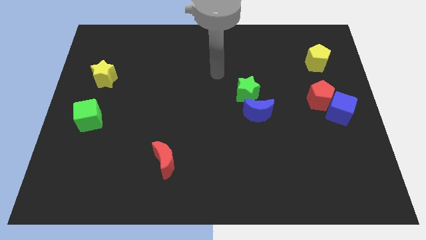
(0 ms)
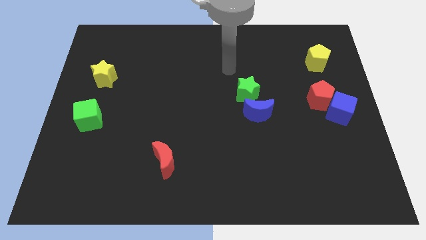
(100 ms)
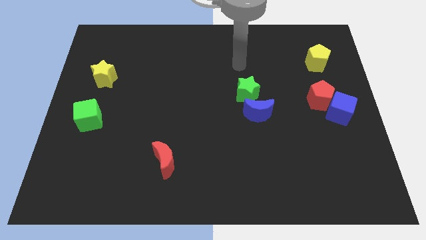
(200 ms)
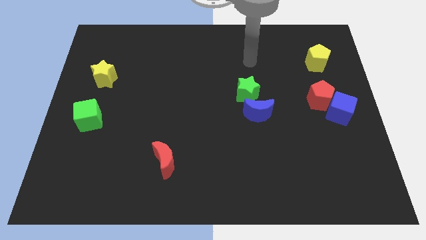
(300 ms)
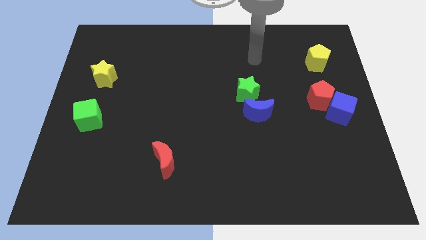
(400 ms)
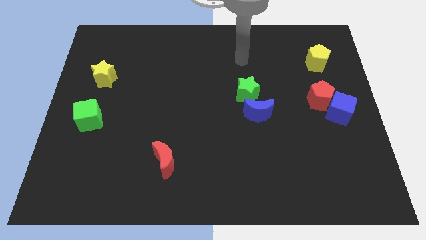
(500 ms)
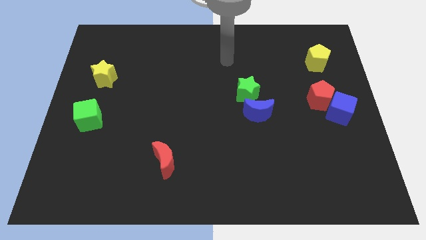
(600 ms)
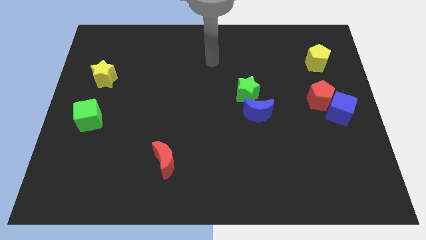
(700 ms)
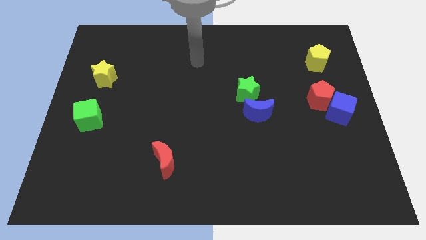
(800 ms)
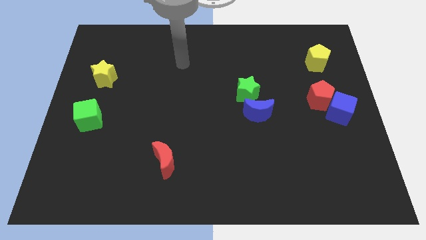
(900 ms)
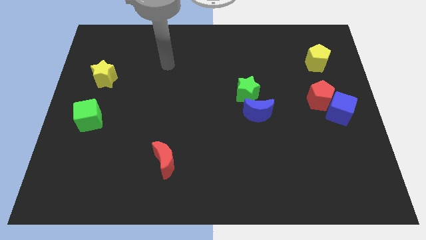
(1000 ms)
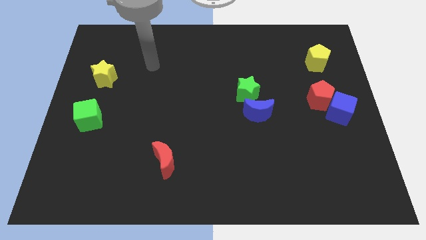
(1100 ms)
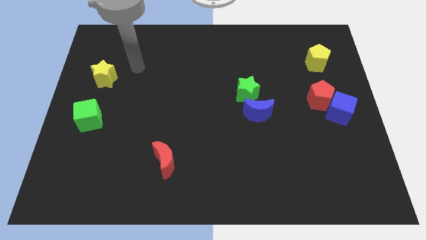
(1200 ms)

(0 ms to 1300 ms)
move the arm towards the yellow star

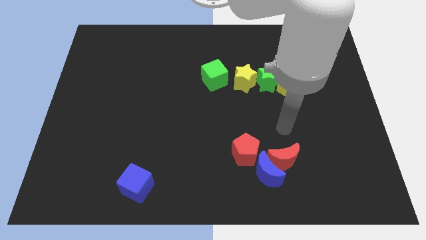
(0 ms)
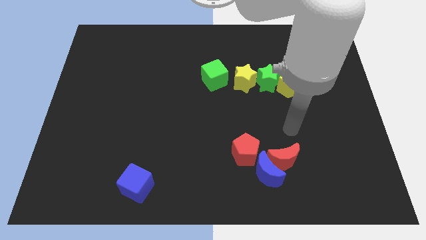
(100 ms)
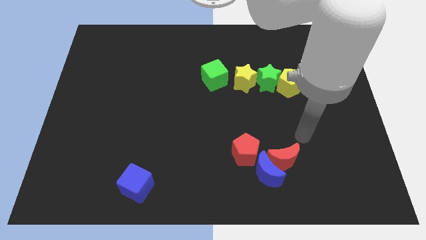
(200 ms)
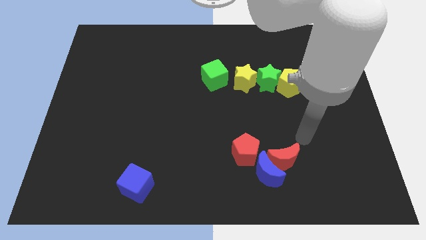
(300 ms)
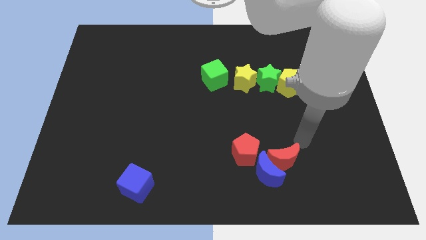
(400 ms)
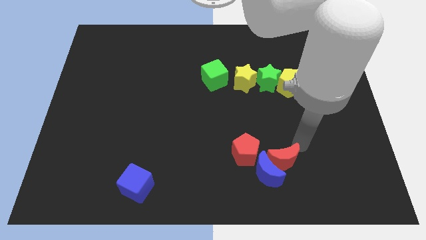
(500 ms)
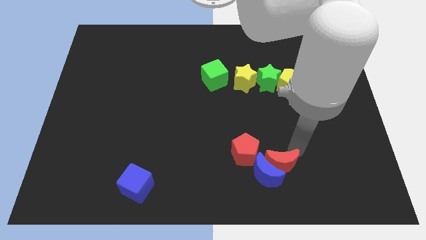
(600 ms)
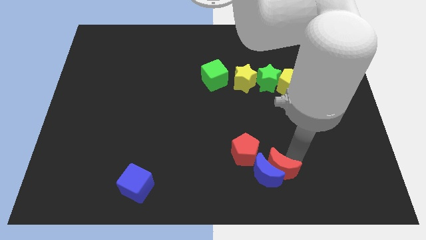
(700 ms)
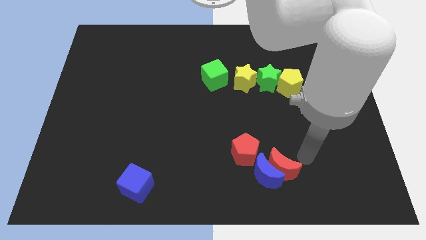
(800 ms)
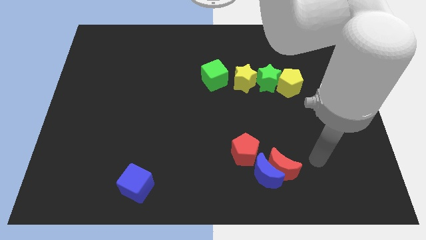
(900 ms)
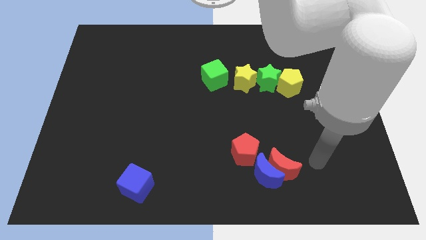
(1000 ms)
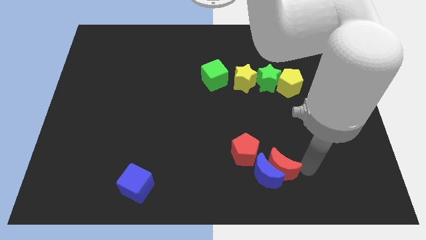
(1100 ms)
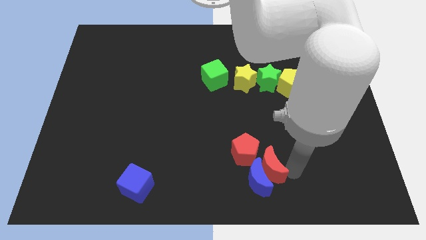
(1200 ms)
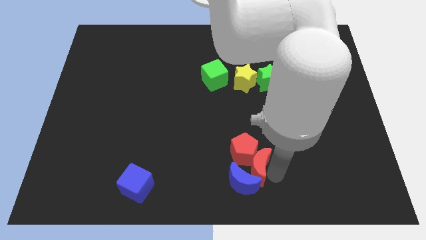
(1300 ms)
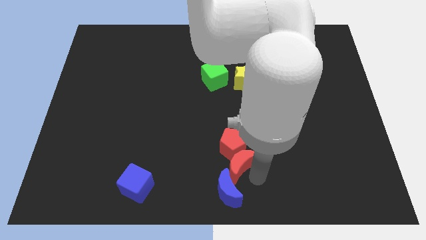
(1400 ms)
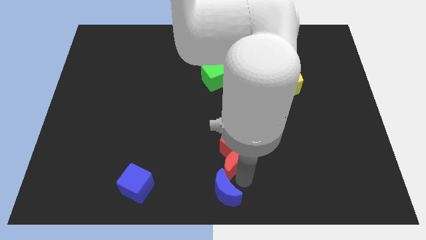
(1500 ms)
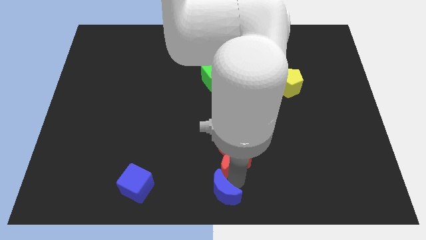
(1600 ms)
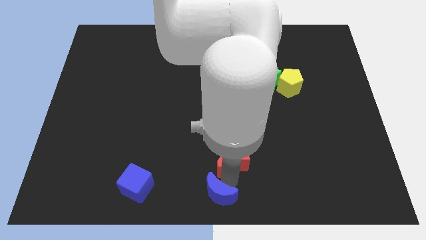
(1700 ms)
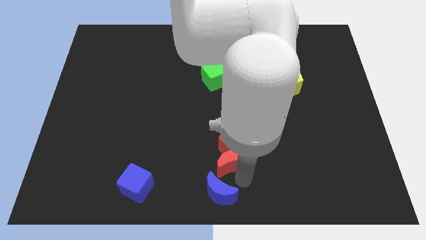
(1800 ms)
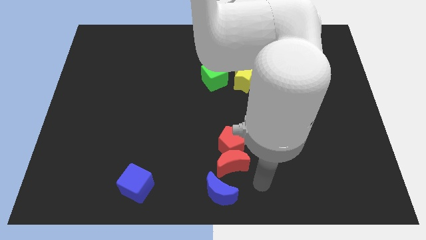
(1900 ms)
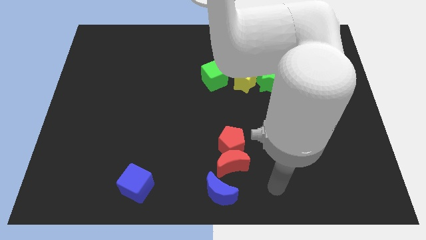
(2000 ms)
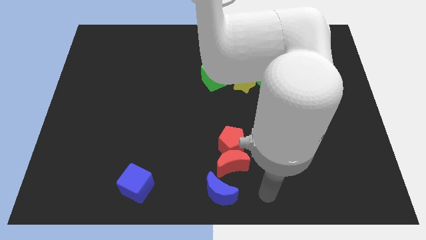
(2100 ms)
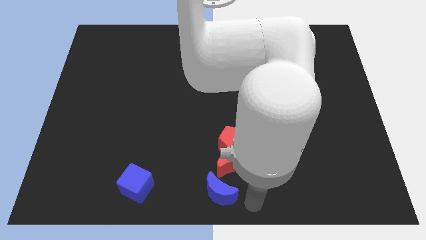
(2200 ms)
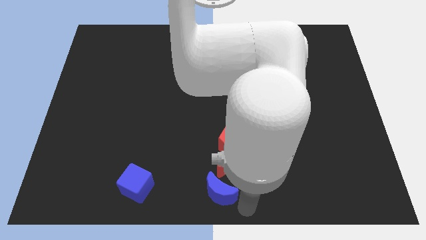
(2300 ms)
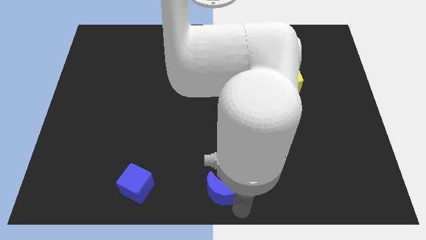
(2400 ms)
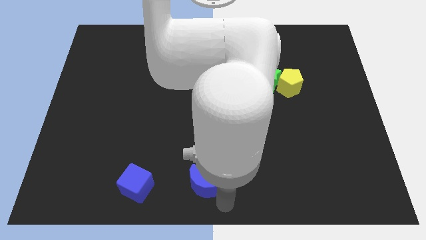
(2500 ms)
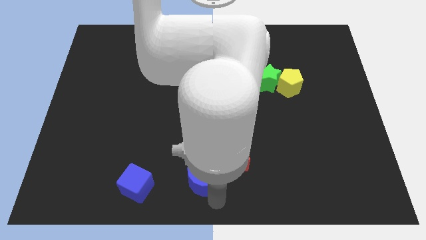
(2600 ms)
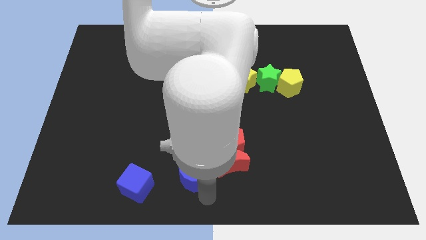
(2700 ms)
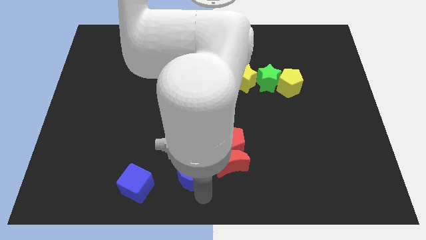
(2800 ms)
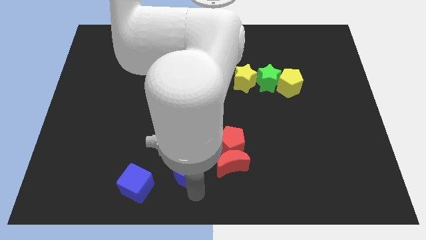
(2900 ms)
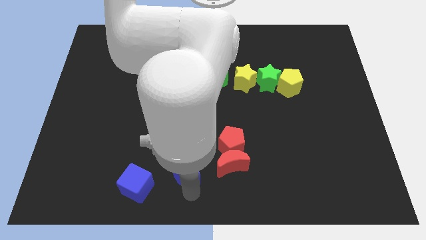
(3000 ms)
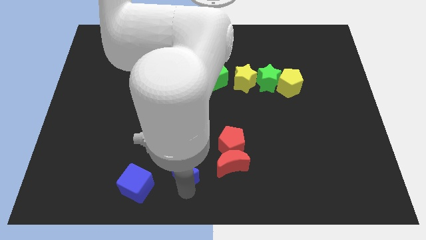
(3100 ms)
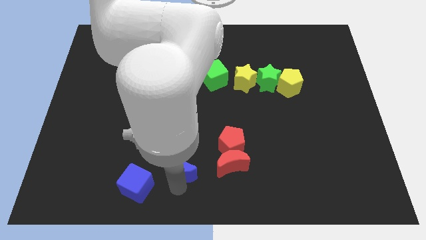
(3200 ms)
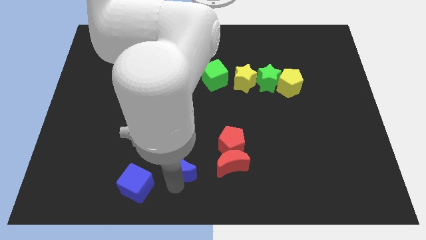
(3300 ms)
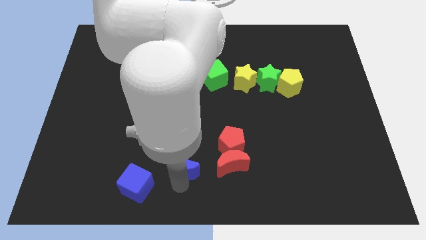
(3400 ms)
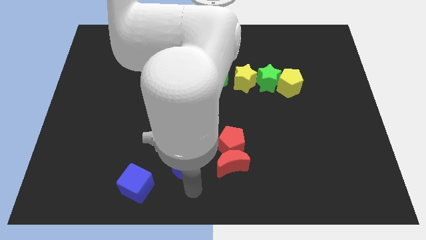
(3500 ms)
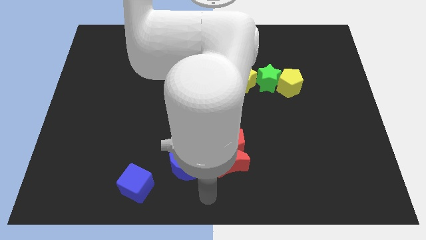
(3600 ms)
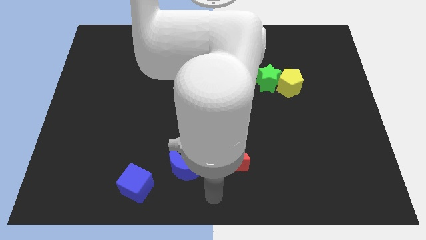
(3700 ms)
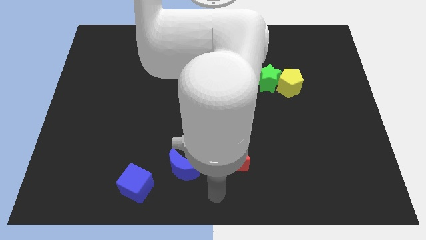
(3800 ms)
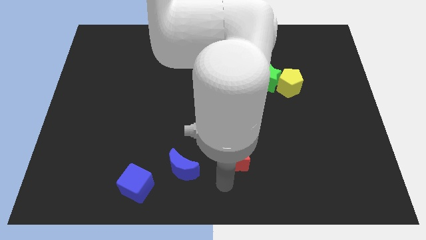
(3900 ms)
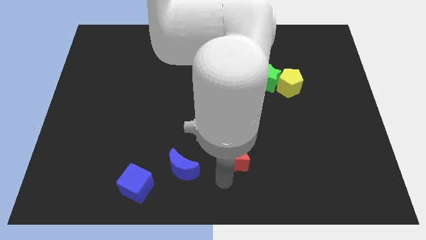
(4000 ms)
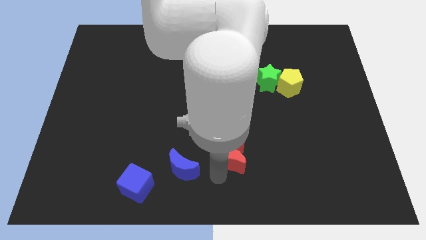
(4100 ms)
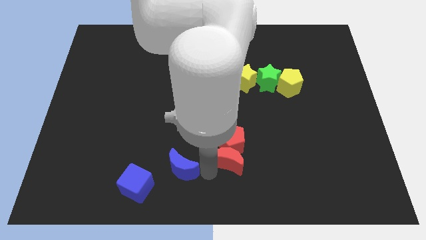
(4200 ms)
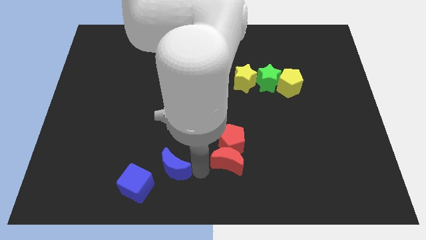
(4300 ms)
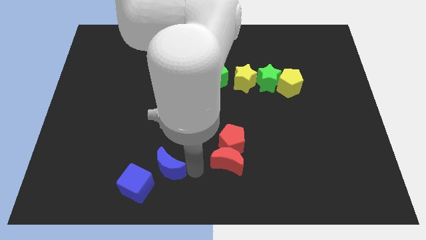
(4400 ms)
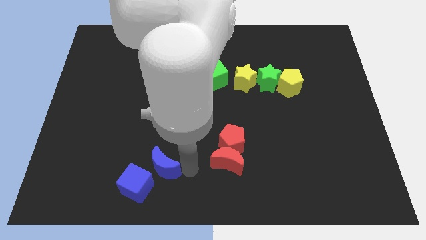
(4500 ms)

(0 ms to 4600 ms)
place the blue moon in between the red moon and blue cube

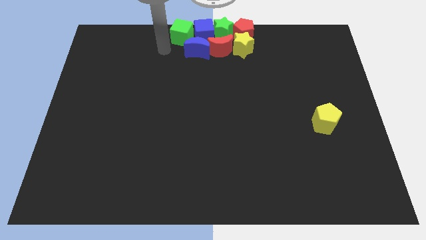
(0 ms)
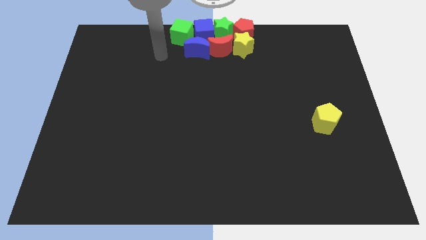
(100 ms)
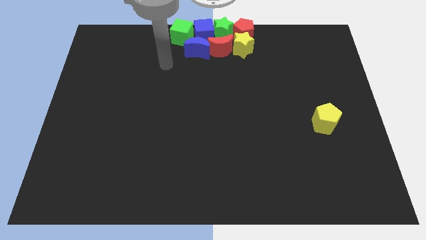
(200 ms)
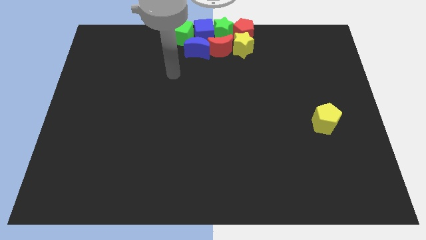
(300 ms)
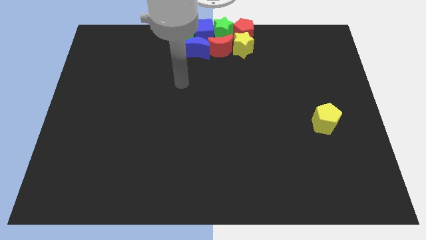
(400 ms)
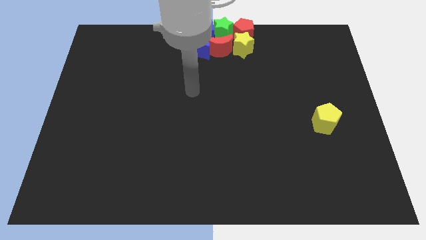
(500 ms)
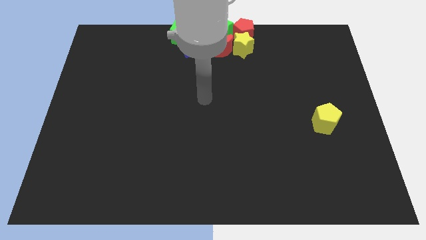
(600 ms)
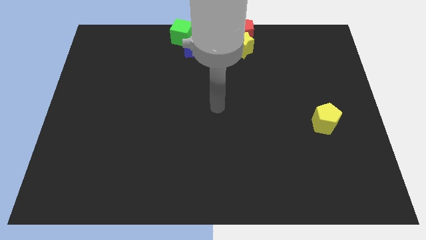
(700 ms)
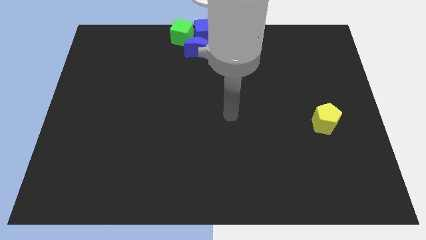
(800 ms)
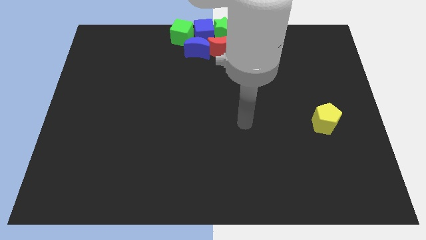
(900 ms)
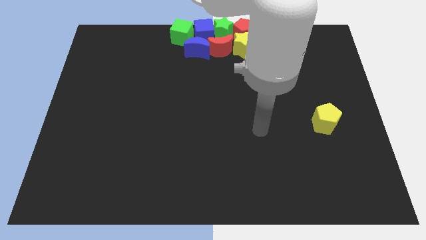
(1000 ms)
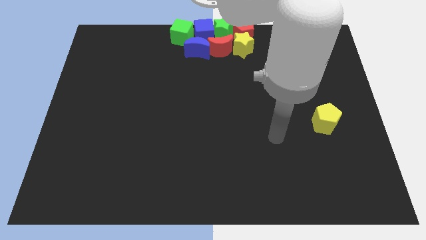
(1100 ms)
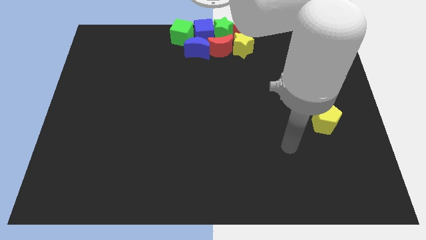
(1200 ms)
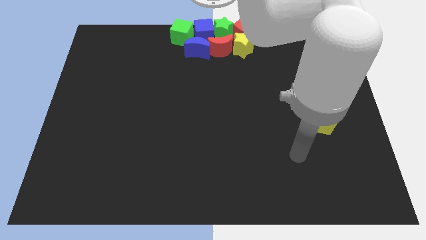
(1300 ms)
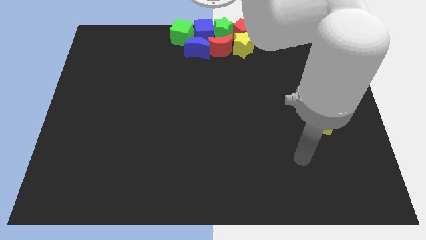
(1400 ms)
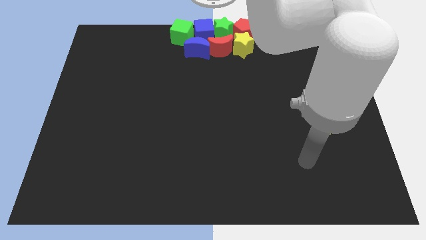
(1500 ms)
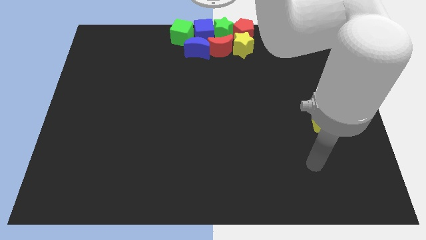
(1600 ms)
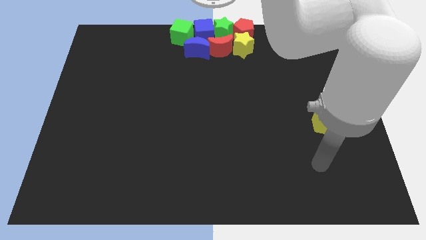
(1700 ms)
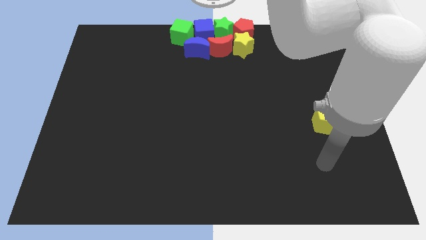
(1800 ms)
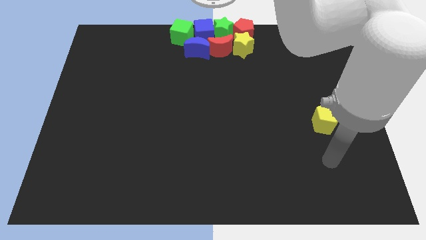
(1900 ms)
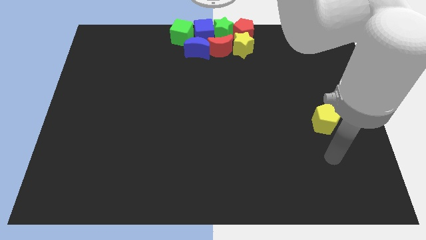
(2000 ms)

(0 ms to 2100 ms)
move the arm behind the yellow pentagon

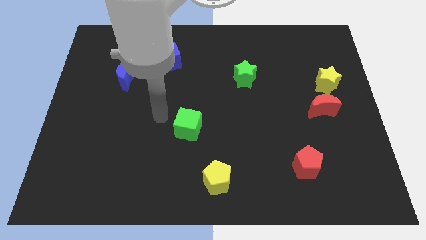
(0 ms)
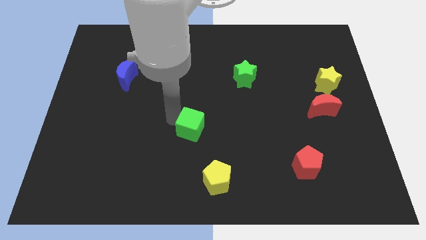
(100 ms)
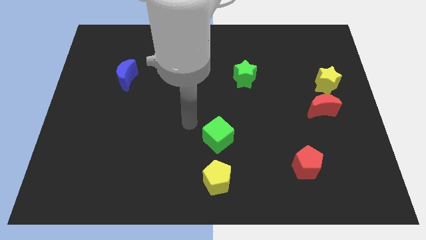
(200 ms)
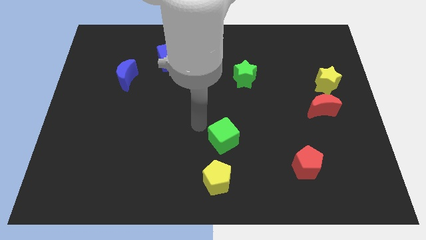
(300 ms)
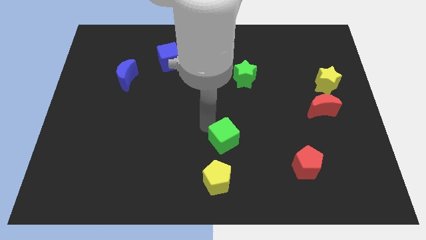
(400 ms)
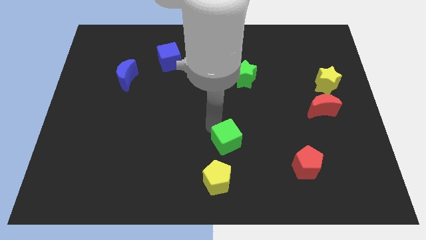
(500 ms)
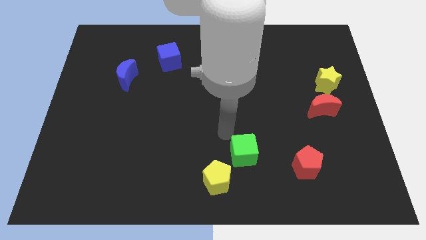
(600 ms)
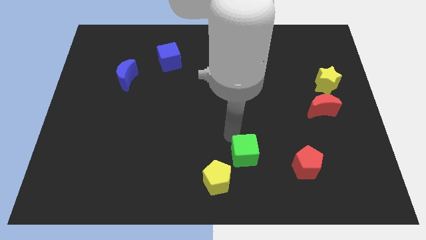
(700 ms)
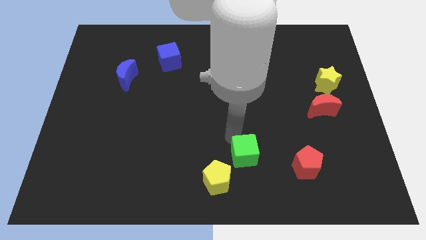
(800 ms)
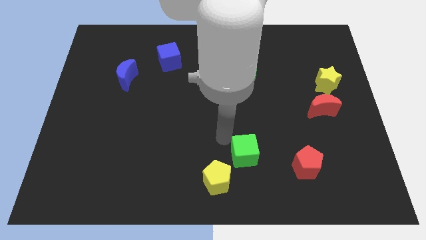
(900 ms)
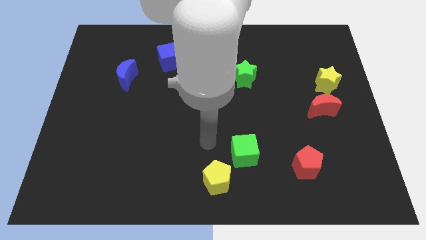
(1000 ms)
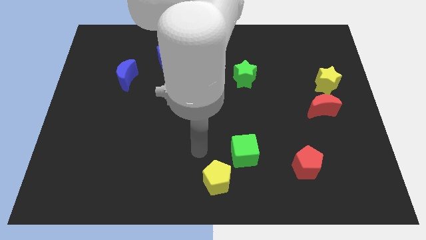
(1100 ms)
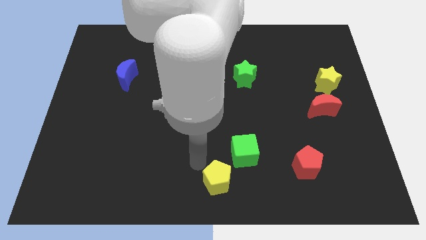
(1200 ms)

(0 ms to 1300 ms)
place green cube to the top right of yellow pentagon
